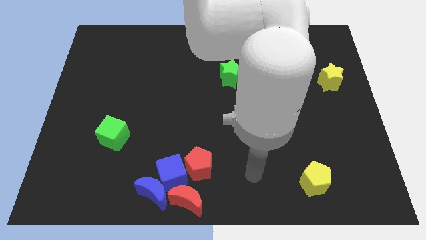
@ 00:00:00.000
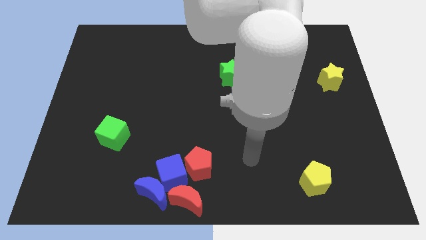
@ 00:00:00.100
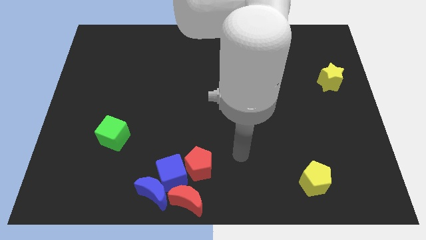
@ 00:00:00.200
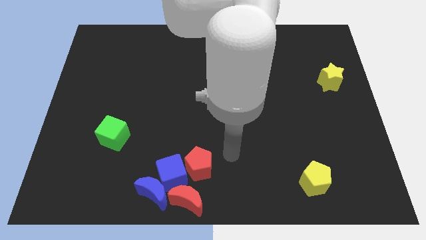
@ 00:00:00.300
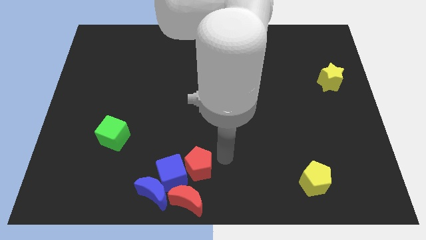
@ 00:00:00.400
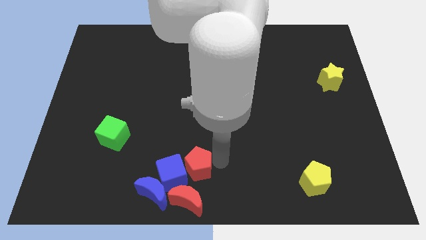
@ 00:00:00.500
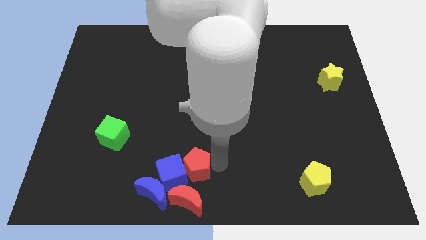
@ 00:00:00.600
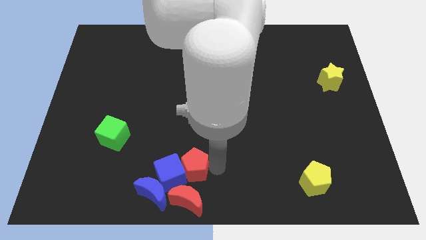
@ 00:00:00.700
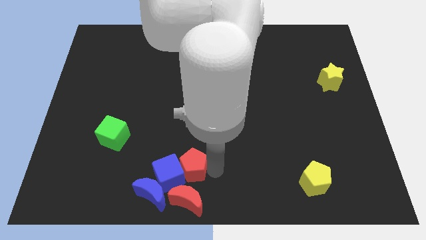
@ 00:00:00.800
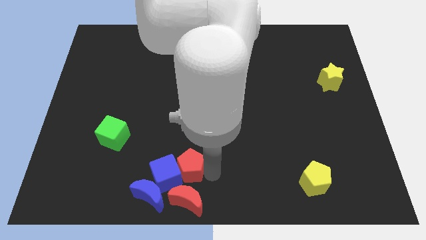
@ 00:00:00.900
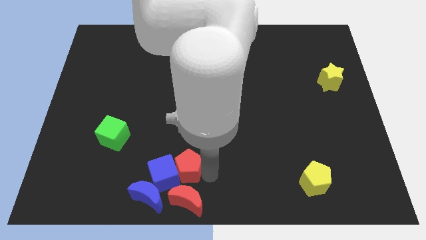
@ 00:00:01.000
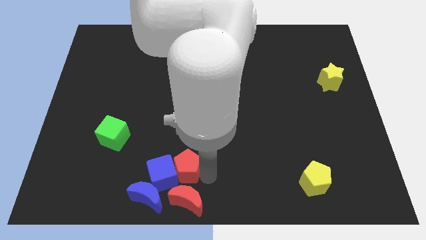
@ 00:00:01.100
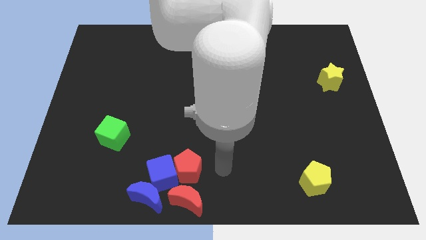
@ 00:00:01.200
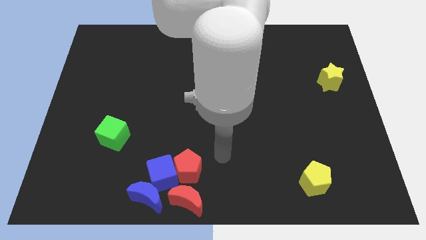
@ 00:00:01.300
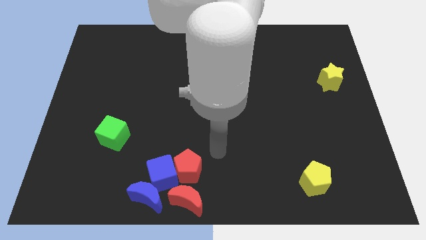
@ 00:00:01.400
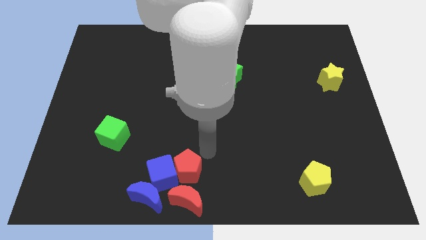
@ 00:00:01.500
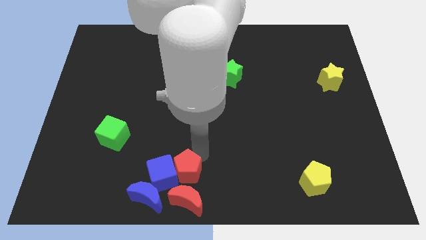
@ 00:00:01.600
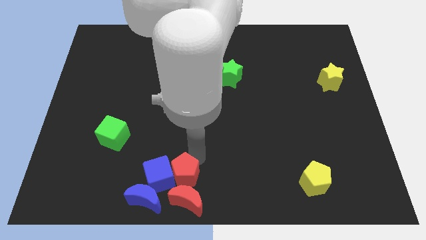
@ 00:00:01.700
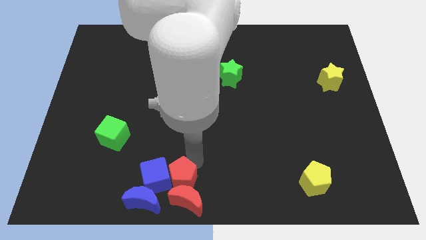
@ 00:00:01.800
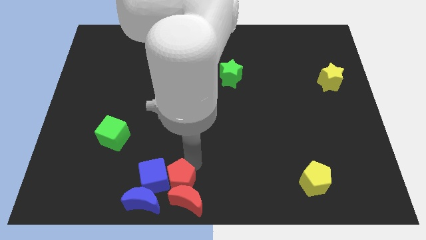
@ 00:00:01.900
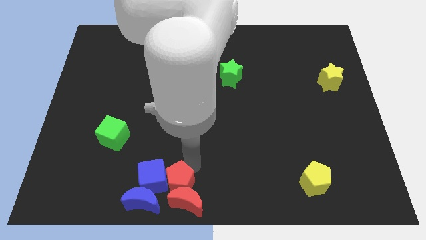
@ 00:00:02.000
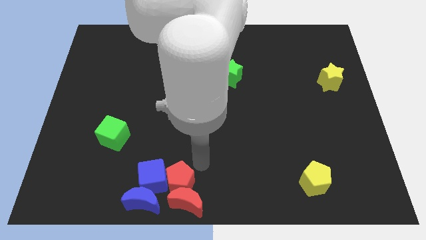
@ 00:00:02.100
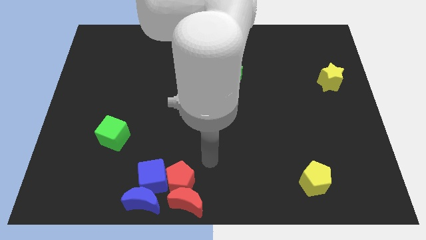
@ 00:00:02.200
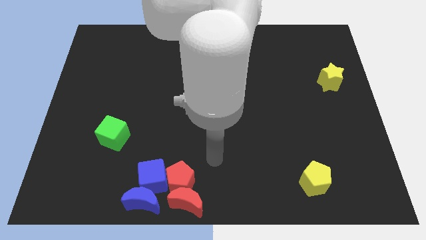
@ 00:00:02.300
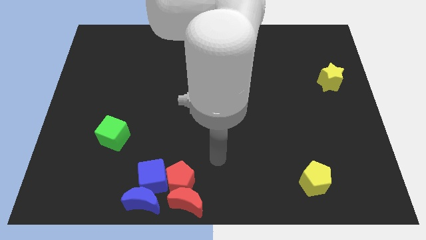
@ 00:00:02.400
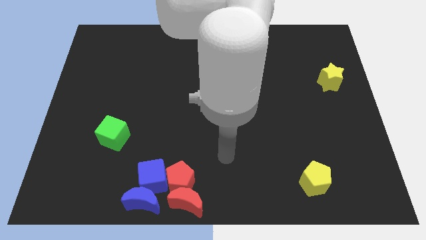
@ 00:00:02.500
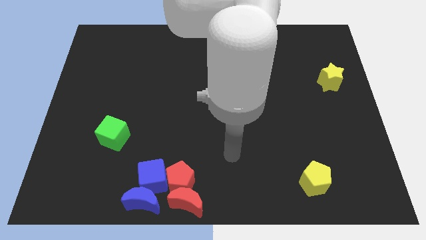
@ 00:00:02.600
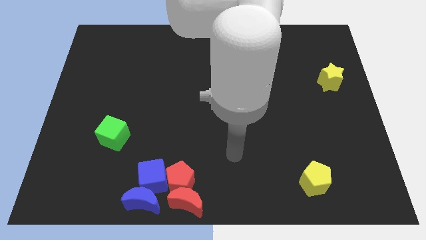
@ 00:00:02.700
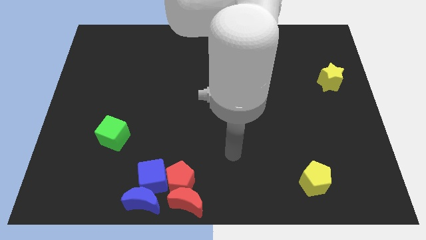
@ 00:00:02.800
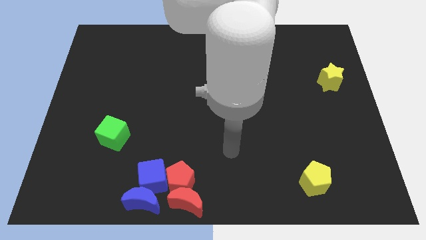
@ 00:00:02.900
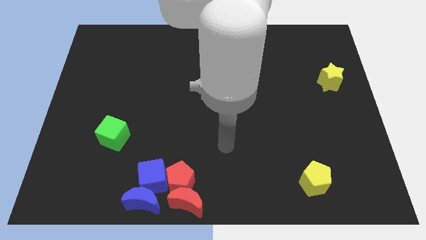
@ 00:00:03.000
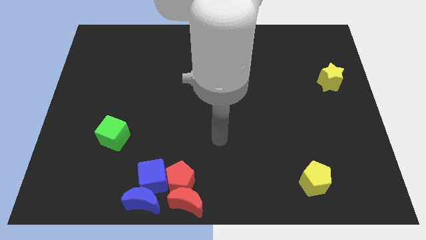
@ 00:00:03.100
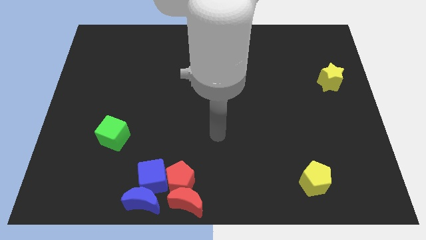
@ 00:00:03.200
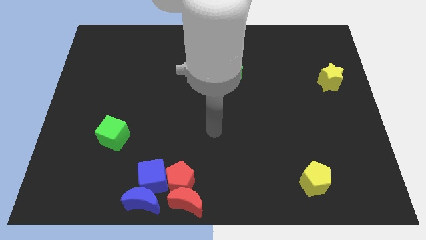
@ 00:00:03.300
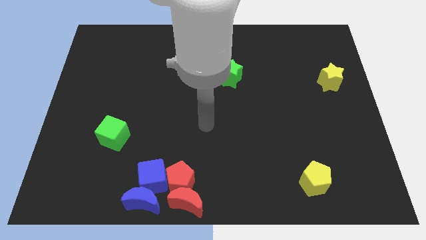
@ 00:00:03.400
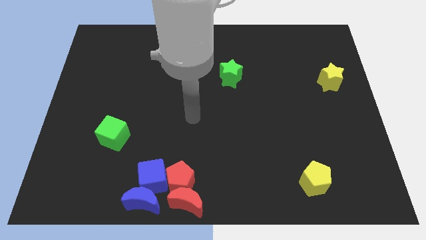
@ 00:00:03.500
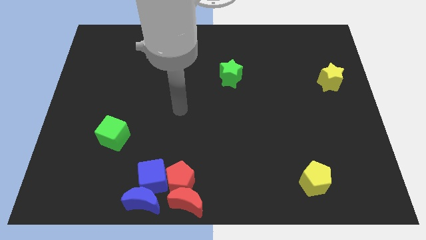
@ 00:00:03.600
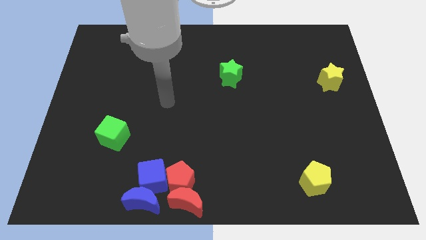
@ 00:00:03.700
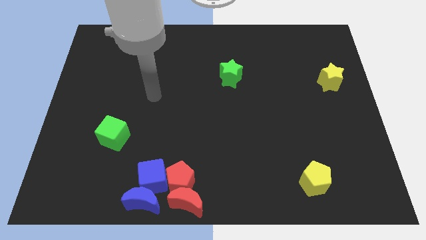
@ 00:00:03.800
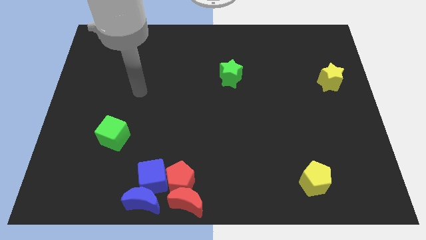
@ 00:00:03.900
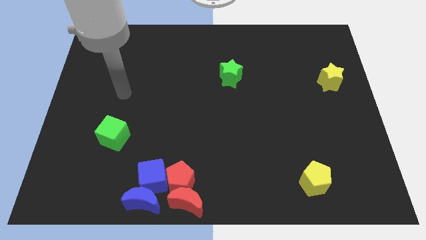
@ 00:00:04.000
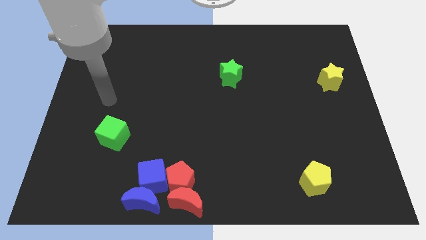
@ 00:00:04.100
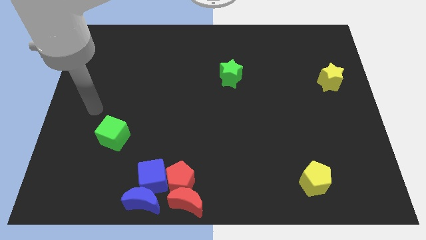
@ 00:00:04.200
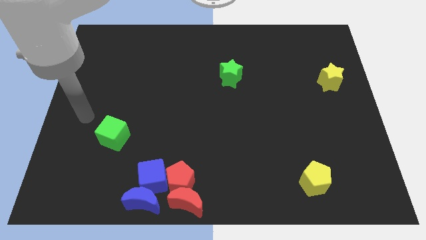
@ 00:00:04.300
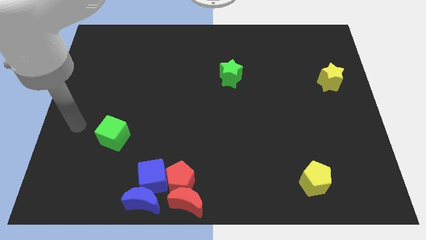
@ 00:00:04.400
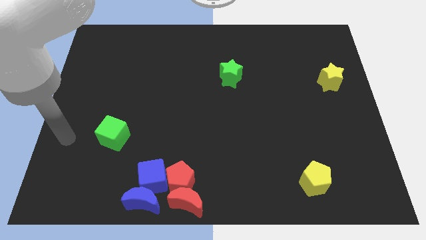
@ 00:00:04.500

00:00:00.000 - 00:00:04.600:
push blue cube with red pentagon

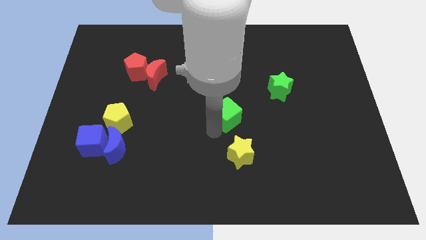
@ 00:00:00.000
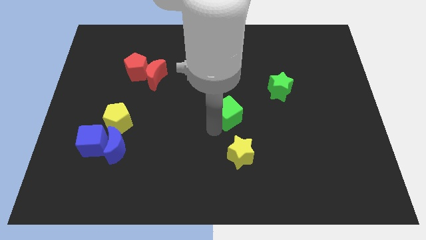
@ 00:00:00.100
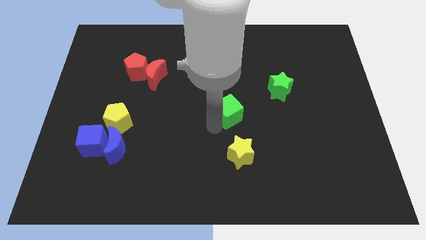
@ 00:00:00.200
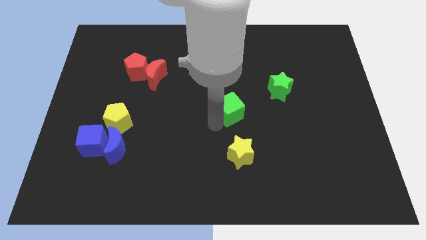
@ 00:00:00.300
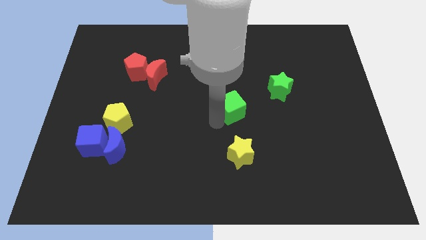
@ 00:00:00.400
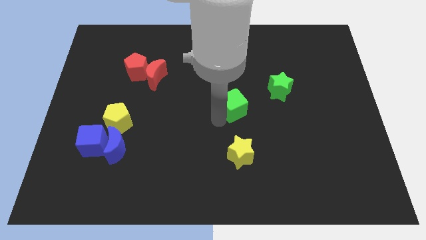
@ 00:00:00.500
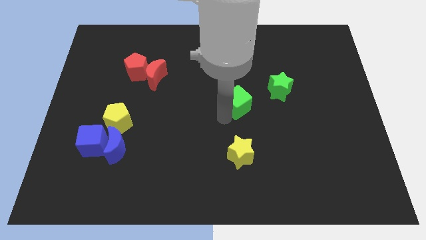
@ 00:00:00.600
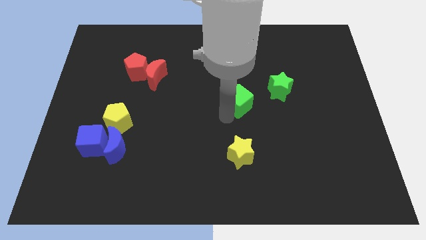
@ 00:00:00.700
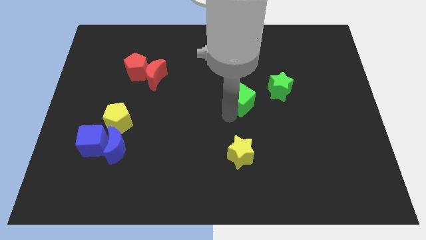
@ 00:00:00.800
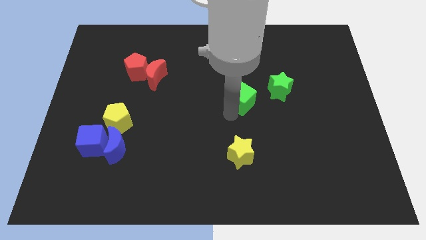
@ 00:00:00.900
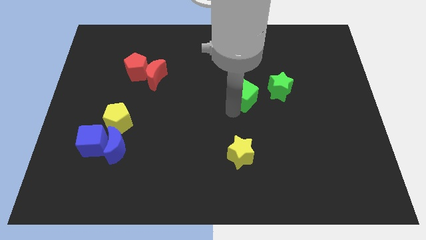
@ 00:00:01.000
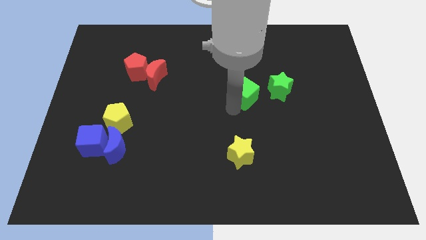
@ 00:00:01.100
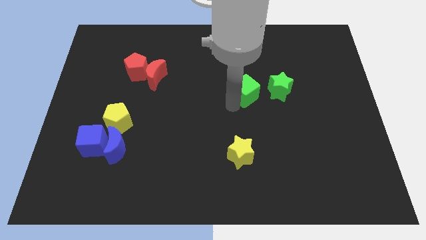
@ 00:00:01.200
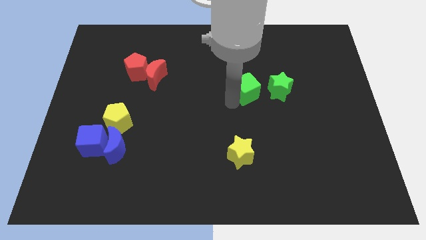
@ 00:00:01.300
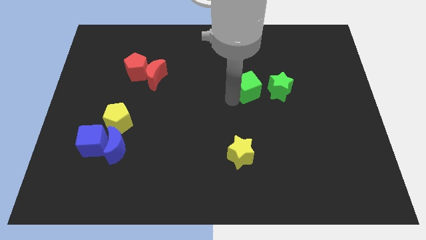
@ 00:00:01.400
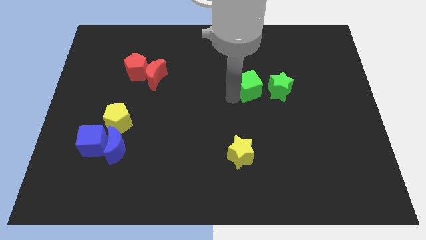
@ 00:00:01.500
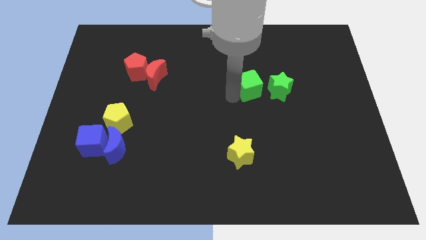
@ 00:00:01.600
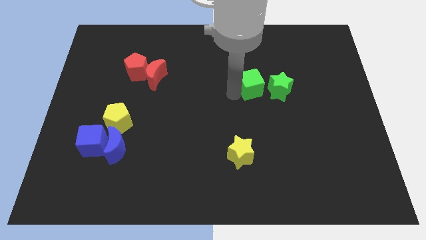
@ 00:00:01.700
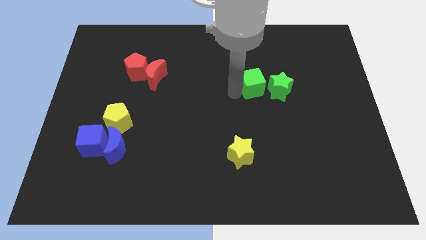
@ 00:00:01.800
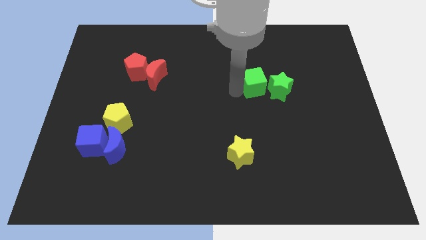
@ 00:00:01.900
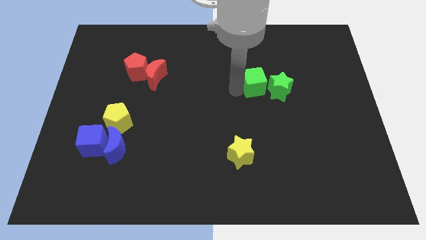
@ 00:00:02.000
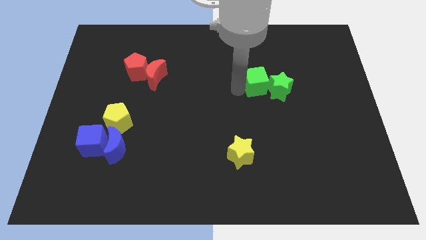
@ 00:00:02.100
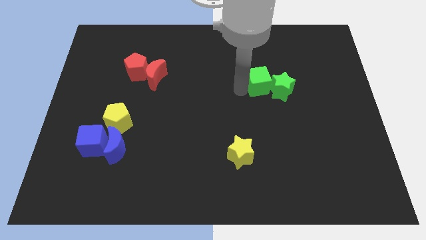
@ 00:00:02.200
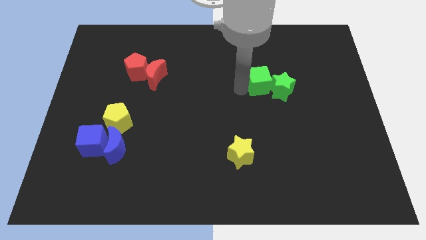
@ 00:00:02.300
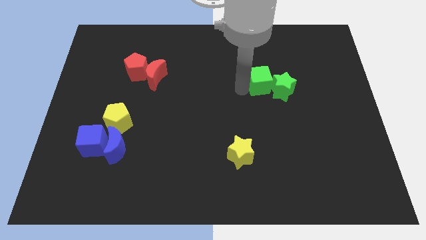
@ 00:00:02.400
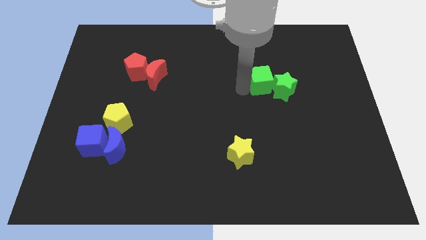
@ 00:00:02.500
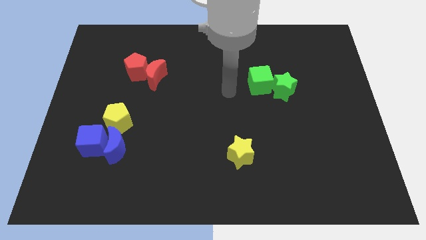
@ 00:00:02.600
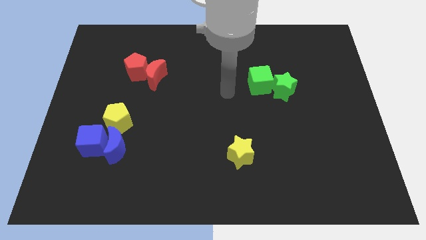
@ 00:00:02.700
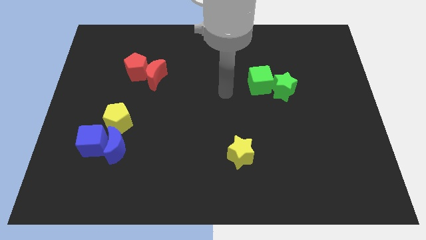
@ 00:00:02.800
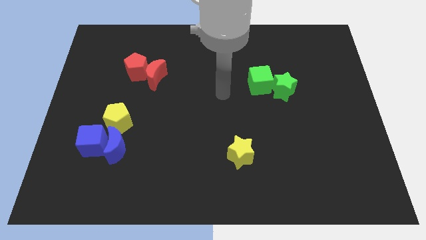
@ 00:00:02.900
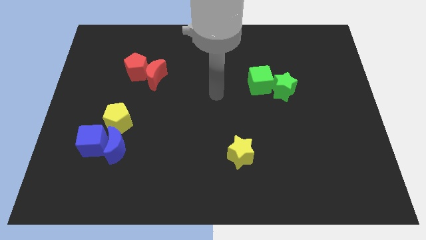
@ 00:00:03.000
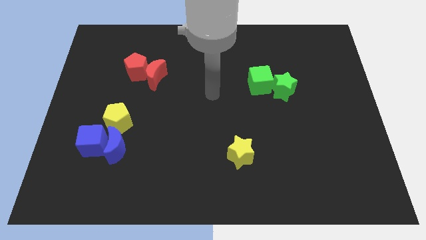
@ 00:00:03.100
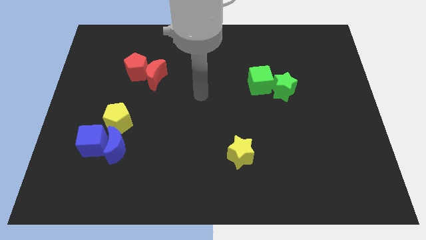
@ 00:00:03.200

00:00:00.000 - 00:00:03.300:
push green cube close to green star

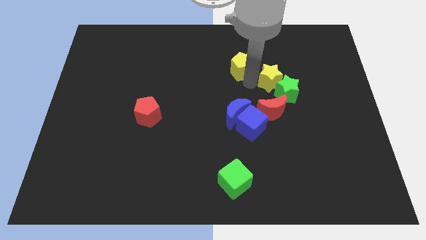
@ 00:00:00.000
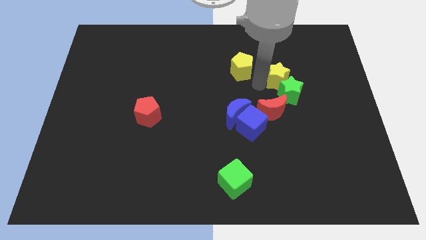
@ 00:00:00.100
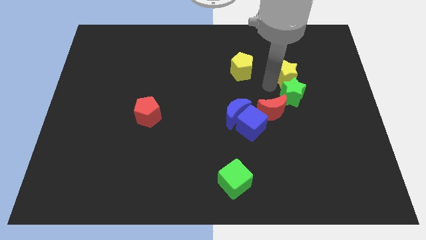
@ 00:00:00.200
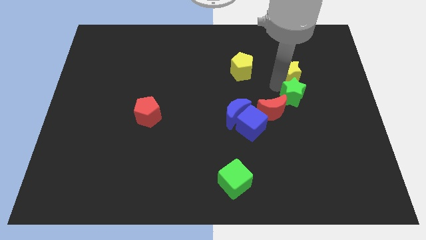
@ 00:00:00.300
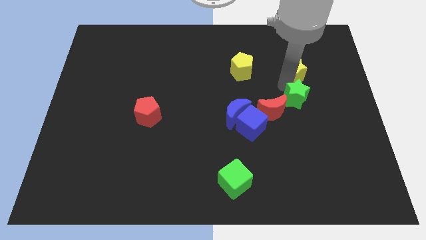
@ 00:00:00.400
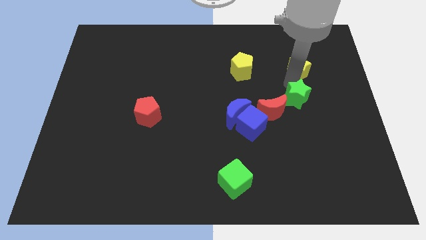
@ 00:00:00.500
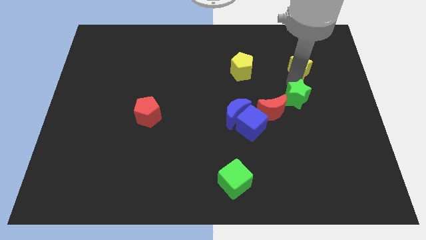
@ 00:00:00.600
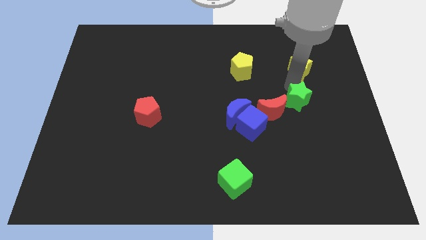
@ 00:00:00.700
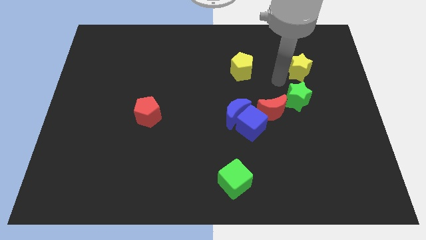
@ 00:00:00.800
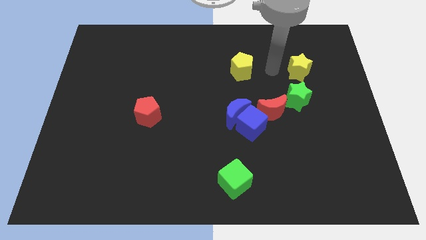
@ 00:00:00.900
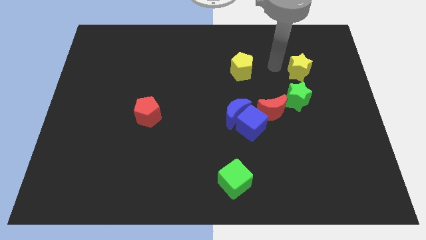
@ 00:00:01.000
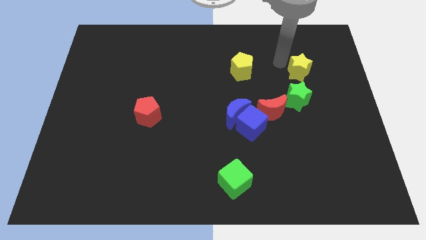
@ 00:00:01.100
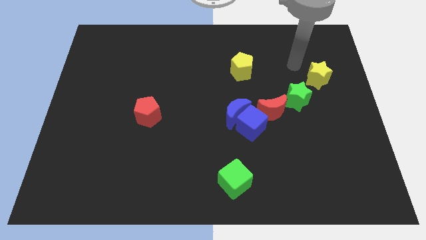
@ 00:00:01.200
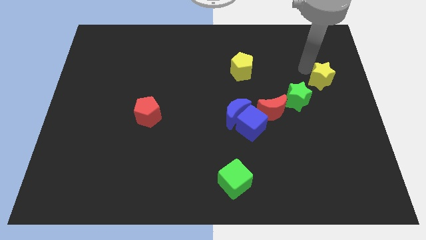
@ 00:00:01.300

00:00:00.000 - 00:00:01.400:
move the yellow star away from the green star
